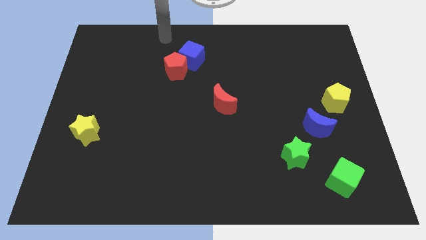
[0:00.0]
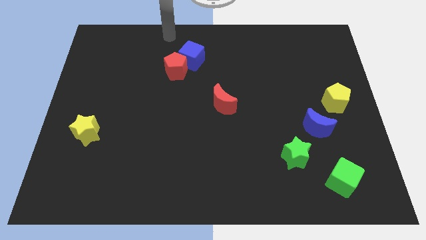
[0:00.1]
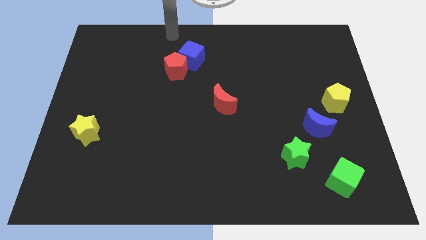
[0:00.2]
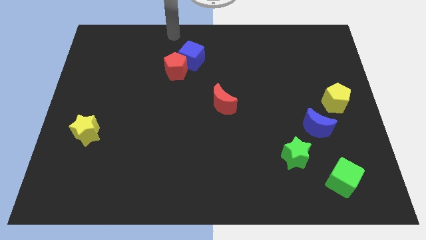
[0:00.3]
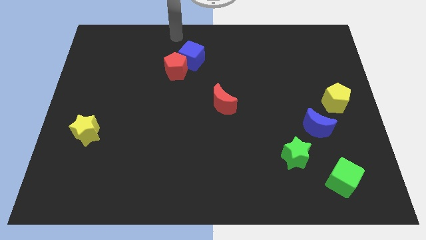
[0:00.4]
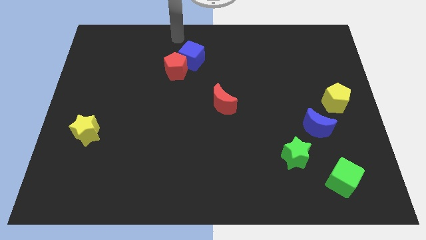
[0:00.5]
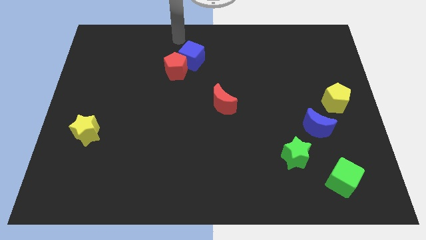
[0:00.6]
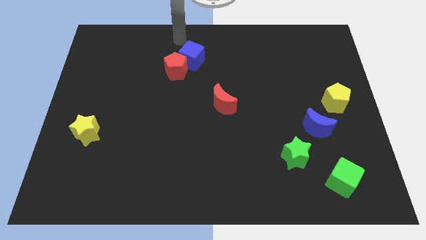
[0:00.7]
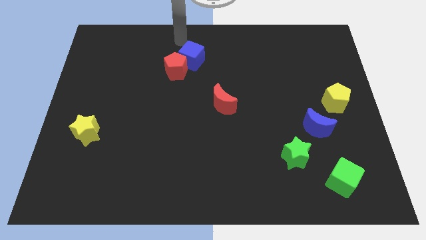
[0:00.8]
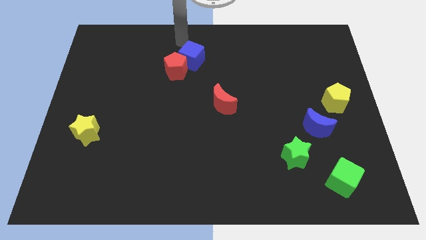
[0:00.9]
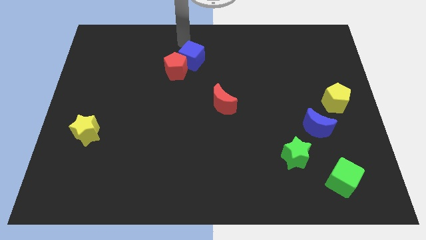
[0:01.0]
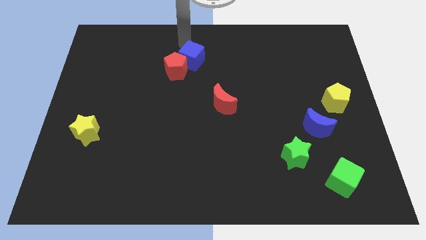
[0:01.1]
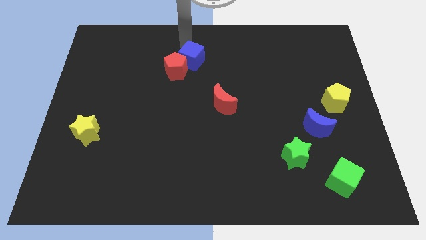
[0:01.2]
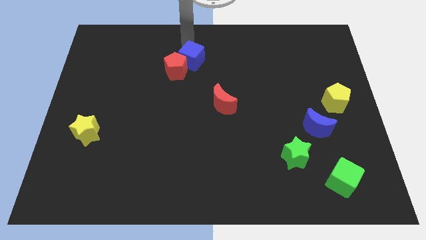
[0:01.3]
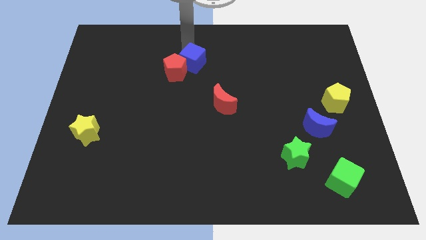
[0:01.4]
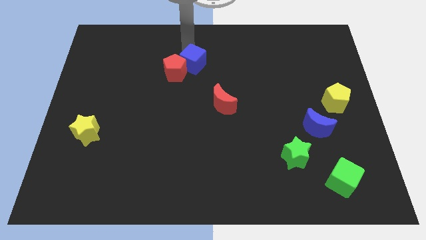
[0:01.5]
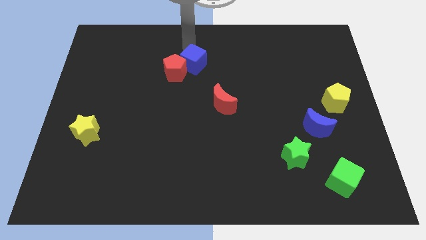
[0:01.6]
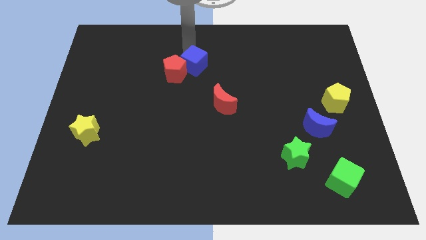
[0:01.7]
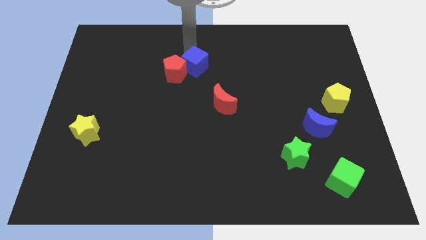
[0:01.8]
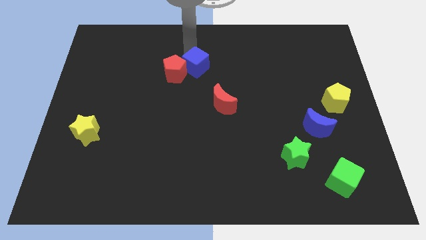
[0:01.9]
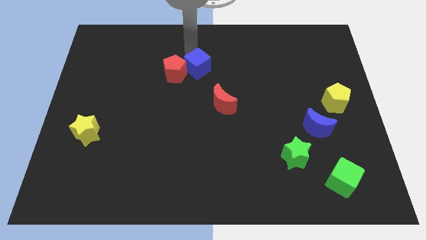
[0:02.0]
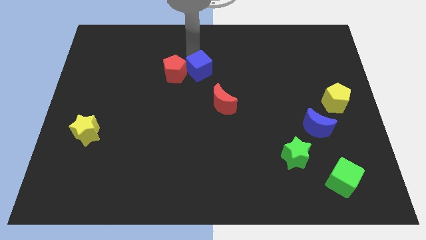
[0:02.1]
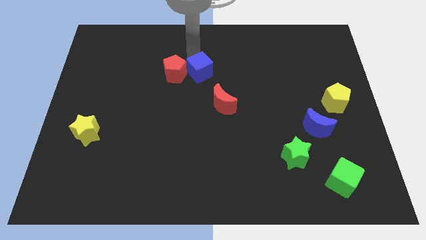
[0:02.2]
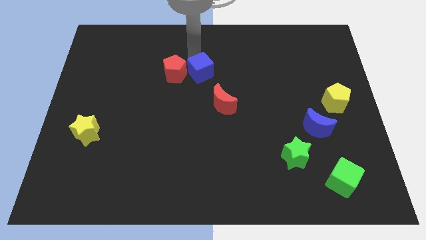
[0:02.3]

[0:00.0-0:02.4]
push the blue cube slightly to the bottom

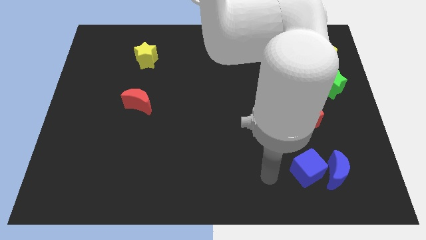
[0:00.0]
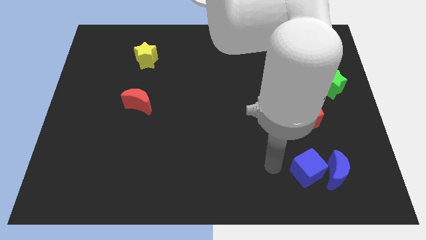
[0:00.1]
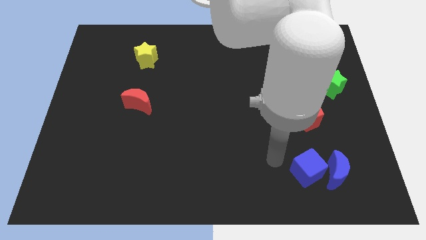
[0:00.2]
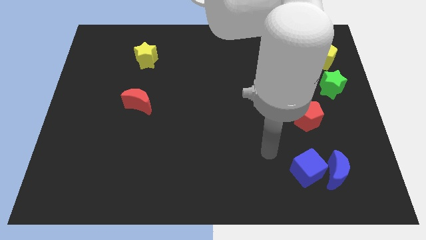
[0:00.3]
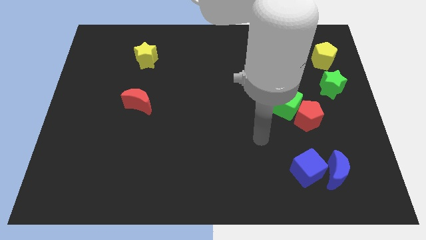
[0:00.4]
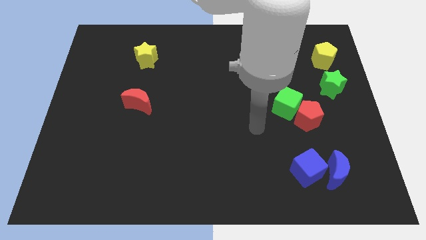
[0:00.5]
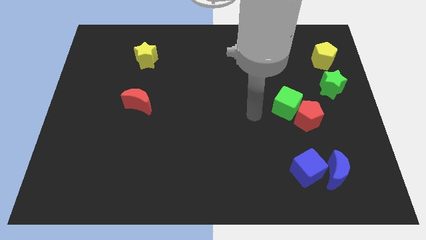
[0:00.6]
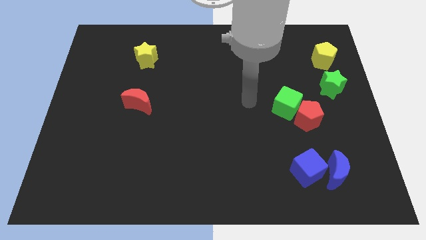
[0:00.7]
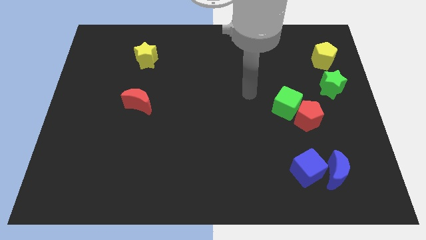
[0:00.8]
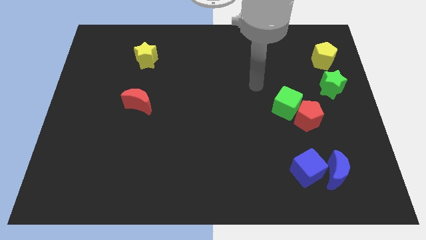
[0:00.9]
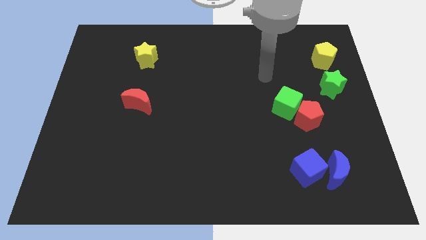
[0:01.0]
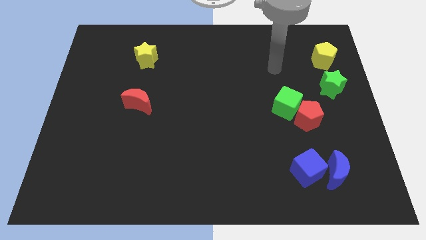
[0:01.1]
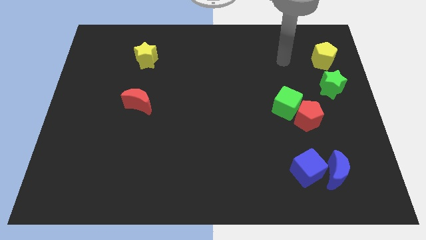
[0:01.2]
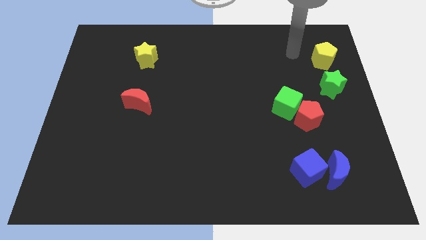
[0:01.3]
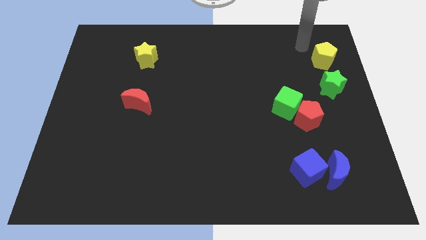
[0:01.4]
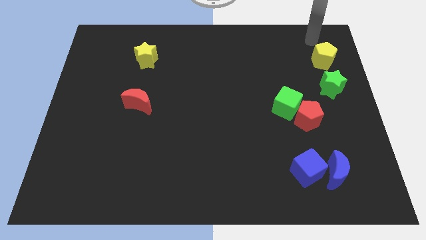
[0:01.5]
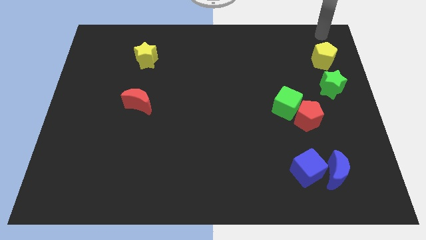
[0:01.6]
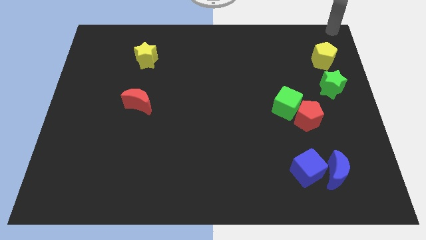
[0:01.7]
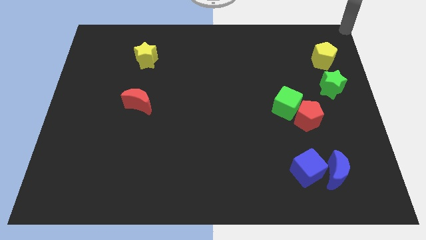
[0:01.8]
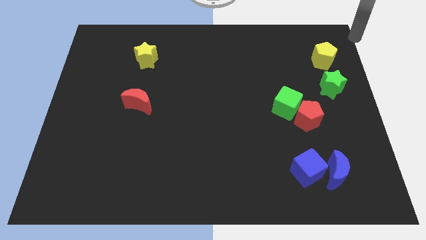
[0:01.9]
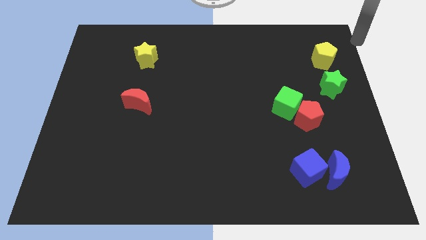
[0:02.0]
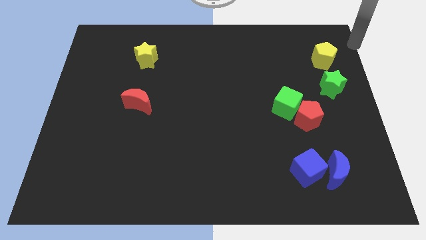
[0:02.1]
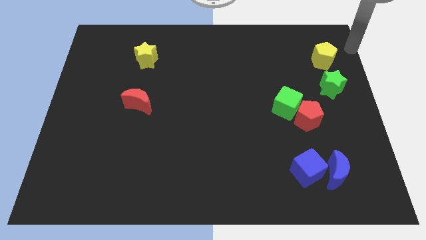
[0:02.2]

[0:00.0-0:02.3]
move the arm towards the top right side of the board

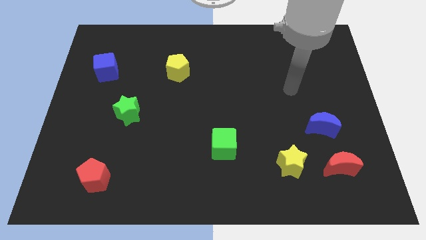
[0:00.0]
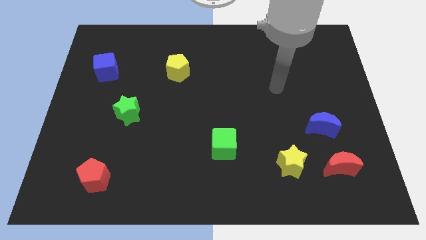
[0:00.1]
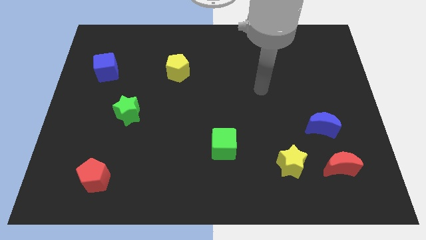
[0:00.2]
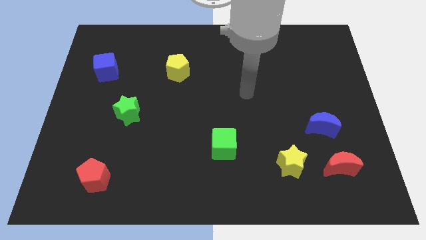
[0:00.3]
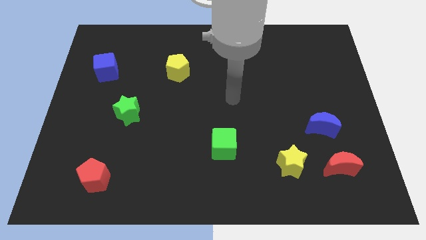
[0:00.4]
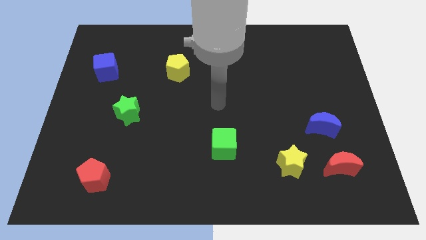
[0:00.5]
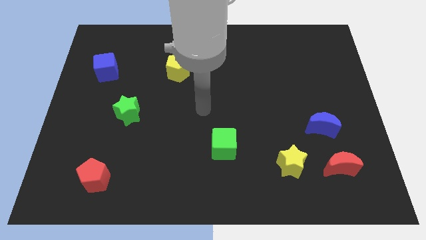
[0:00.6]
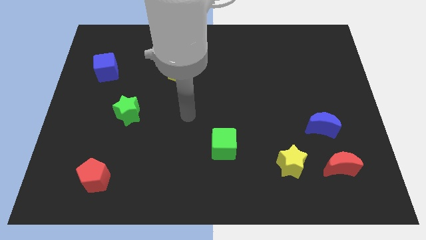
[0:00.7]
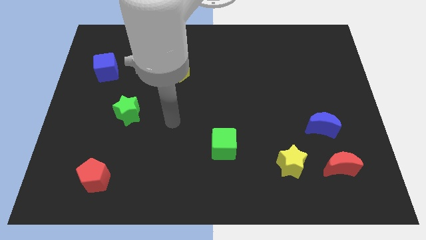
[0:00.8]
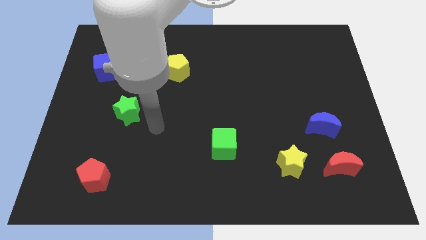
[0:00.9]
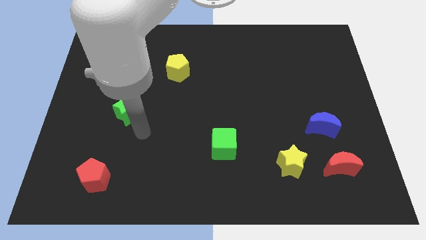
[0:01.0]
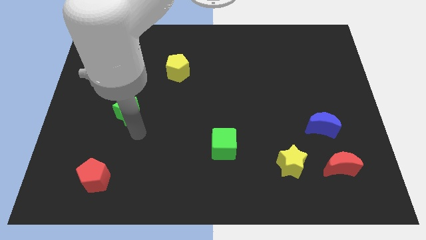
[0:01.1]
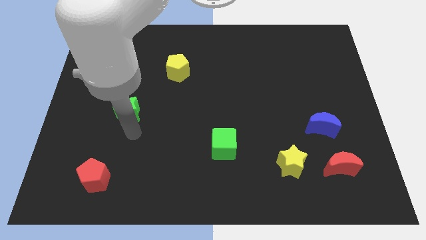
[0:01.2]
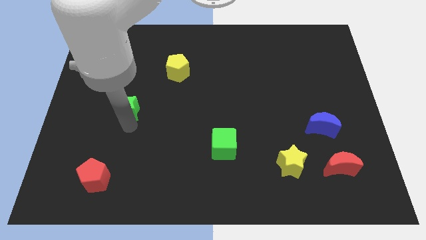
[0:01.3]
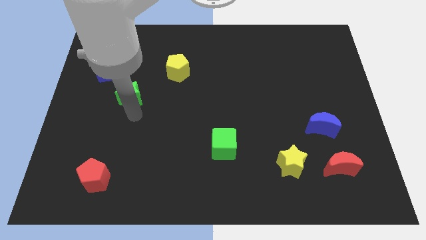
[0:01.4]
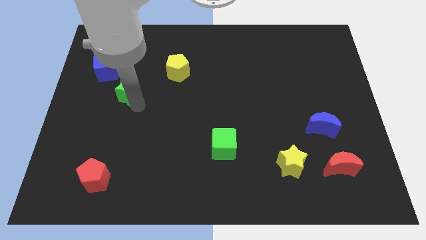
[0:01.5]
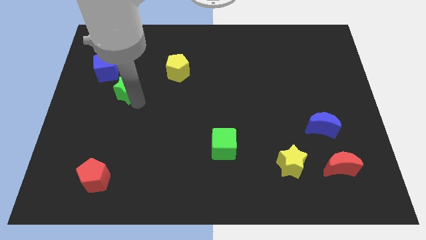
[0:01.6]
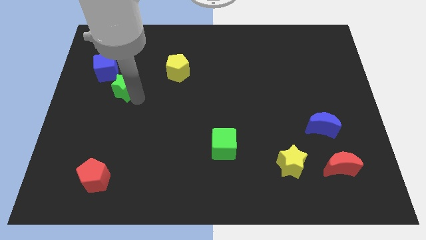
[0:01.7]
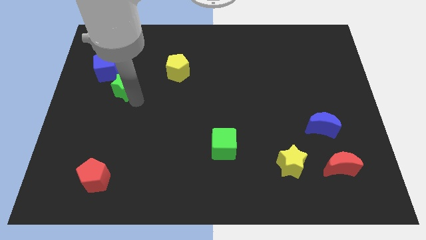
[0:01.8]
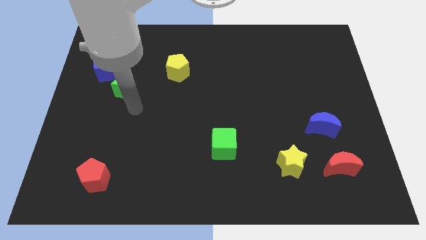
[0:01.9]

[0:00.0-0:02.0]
push the green star to the bottom of the board

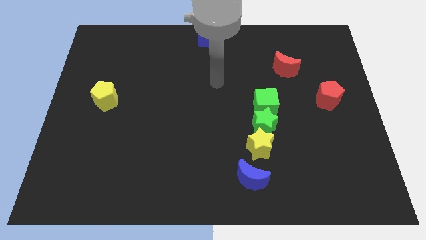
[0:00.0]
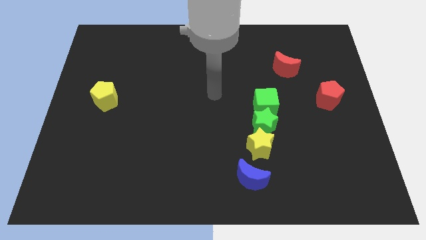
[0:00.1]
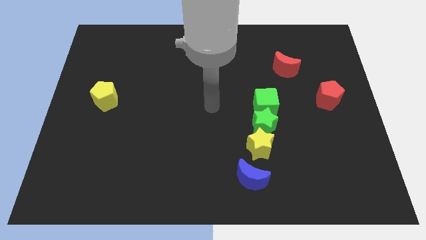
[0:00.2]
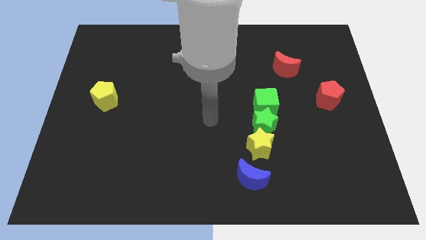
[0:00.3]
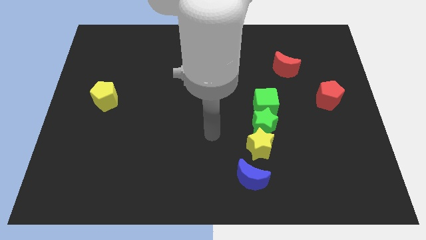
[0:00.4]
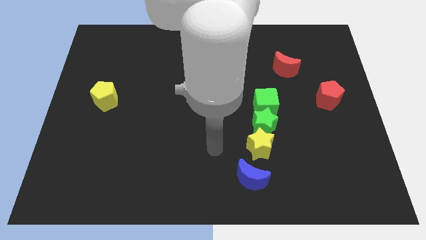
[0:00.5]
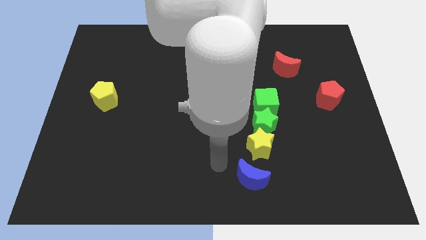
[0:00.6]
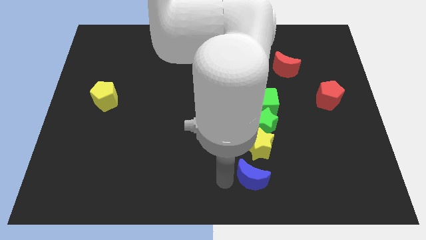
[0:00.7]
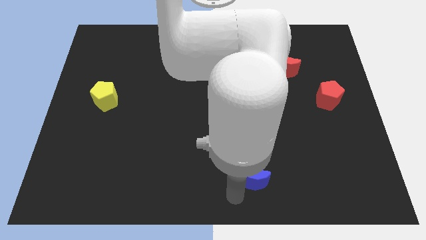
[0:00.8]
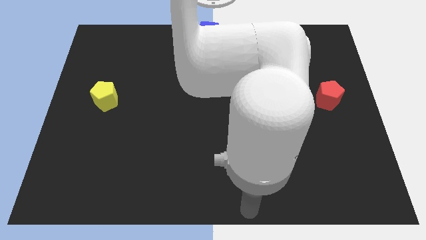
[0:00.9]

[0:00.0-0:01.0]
place arm to bottom center

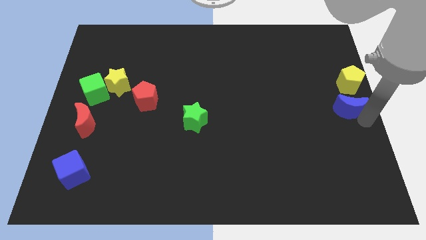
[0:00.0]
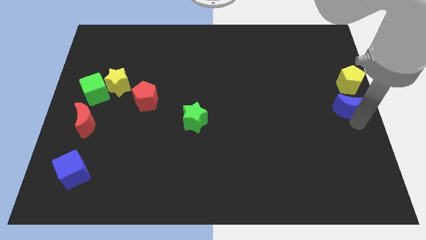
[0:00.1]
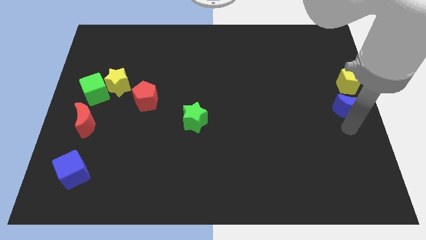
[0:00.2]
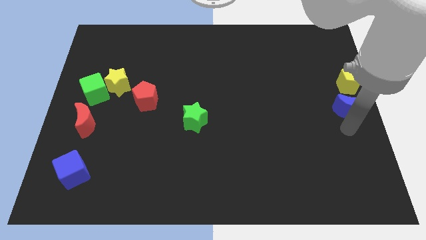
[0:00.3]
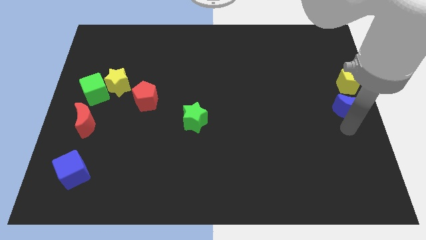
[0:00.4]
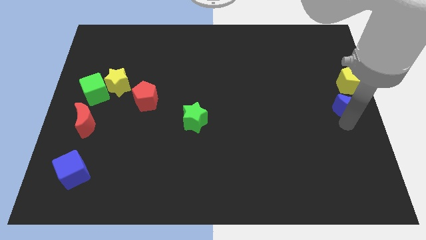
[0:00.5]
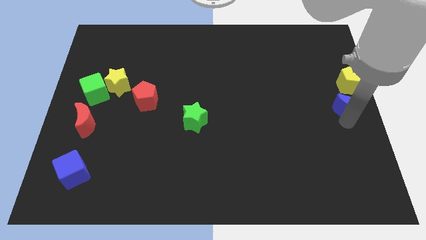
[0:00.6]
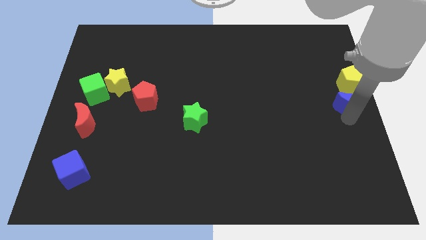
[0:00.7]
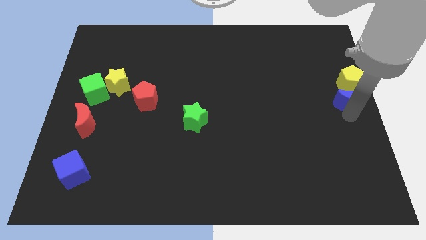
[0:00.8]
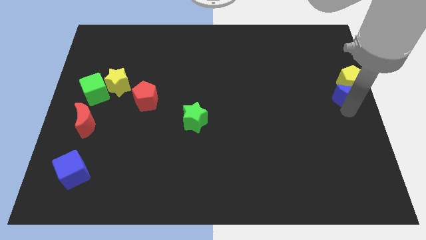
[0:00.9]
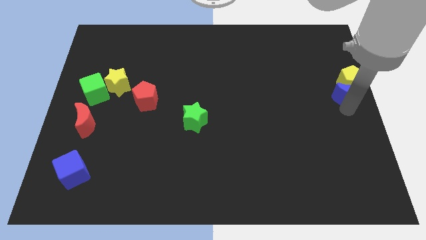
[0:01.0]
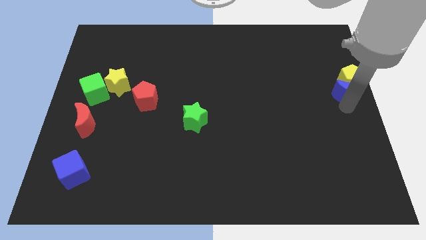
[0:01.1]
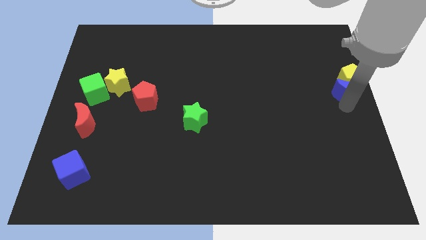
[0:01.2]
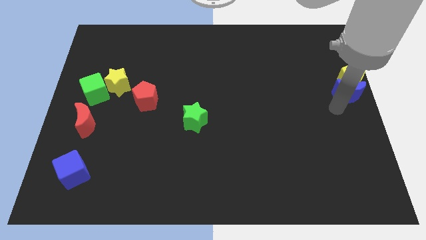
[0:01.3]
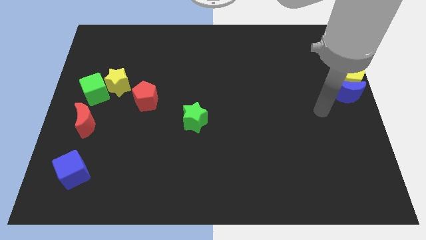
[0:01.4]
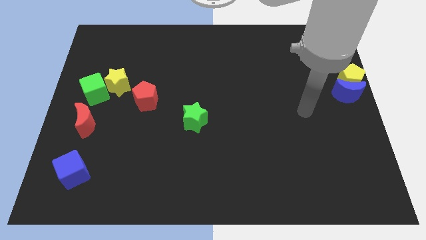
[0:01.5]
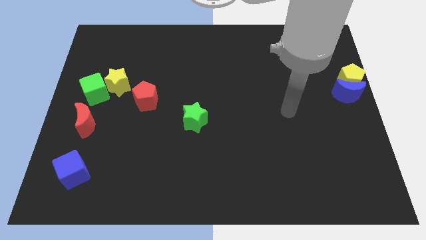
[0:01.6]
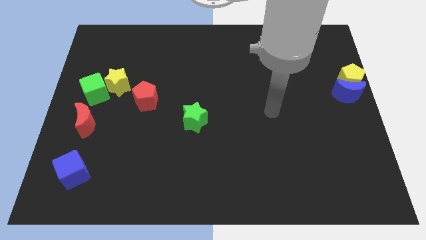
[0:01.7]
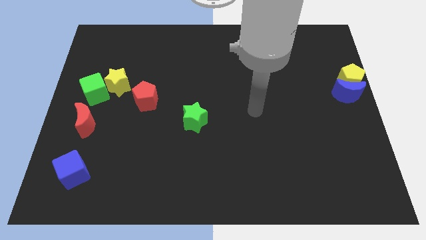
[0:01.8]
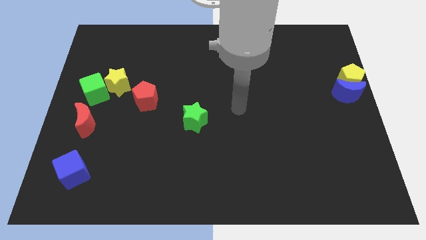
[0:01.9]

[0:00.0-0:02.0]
push the blue moon into the yellow pentagon
